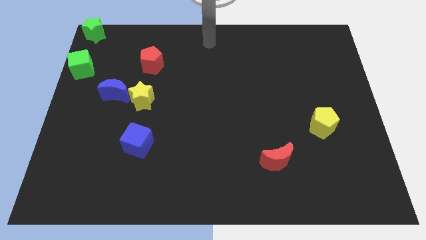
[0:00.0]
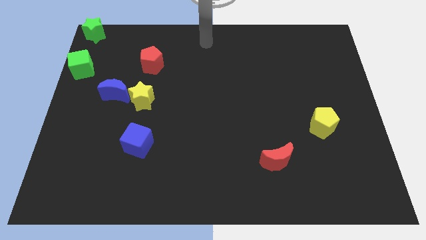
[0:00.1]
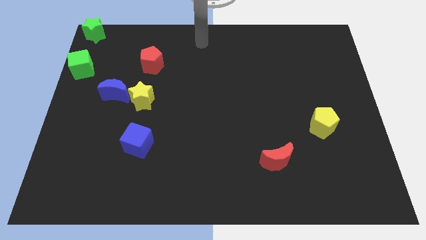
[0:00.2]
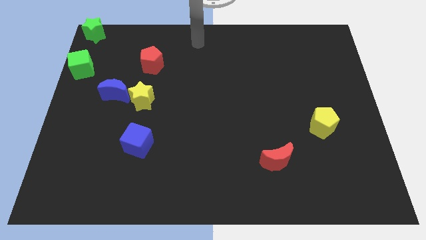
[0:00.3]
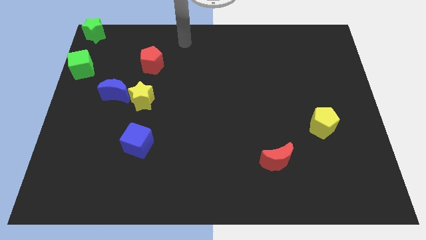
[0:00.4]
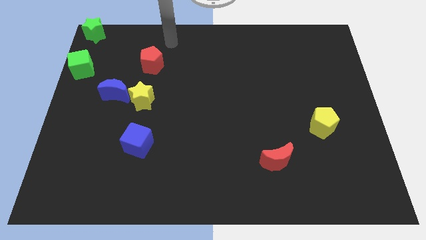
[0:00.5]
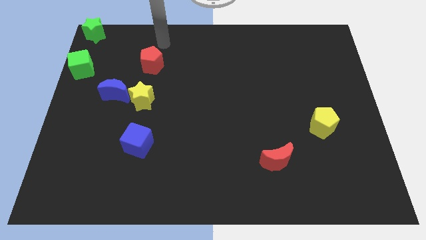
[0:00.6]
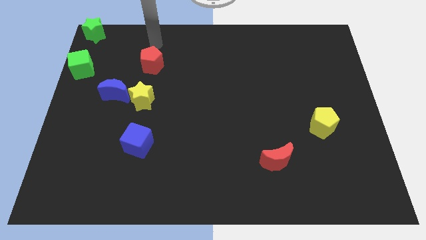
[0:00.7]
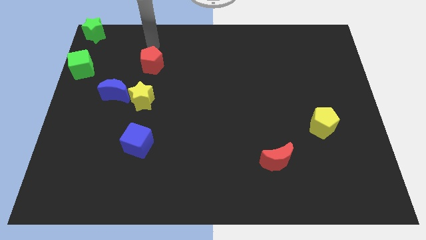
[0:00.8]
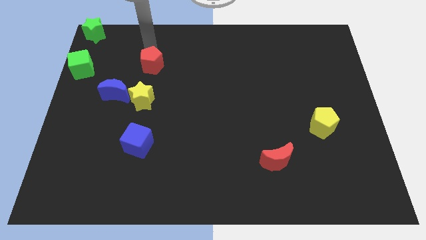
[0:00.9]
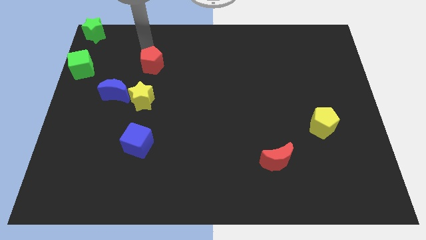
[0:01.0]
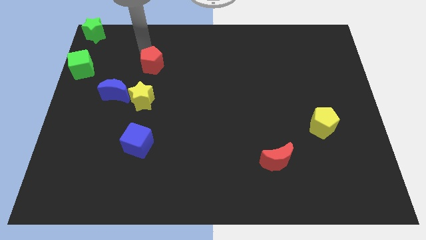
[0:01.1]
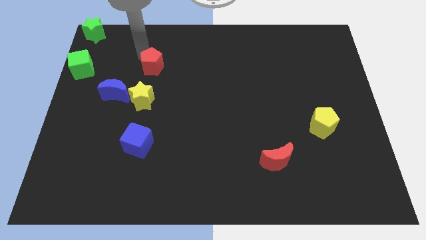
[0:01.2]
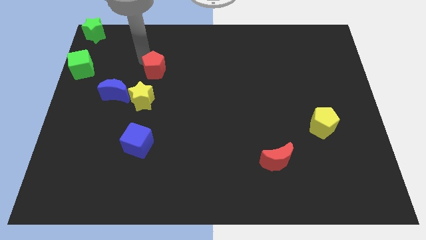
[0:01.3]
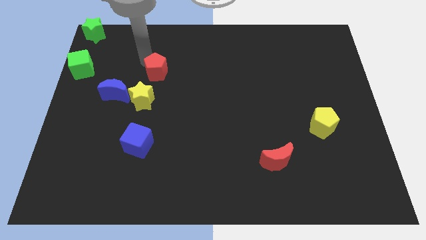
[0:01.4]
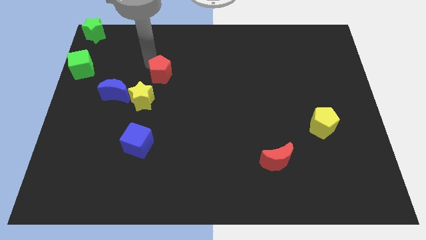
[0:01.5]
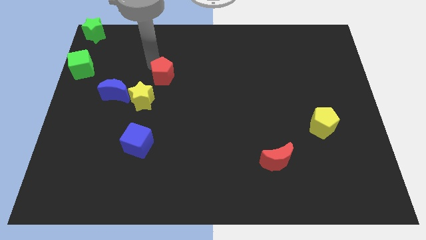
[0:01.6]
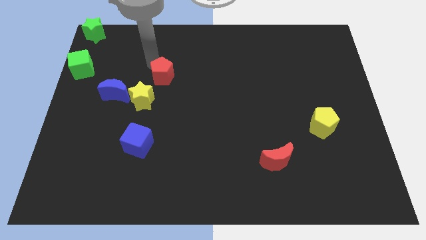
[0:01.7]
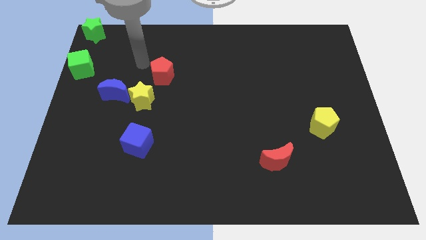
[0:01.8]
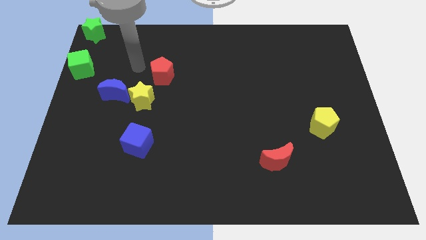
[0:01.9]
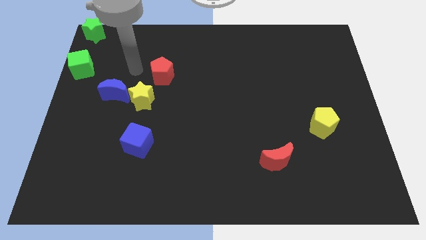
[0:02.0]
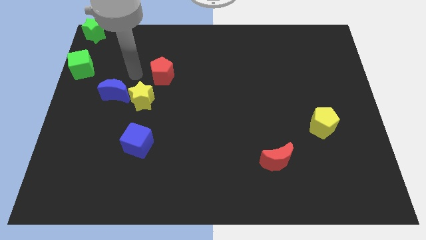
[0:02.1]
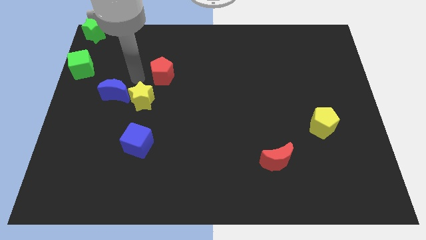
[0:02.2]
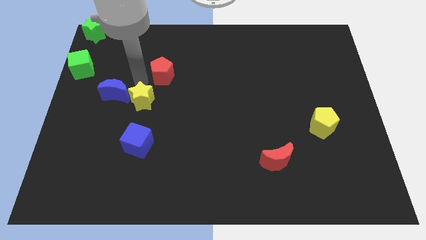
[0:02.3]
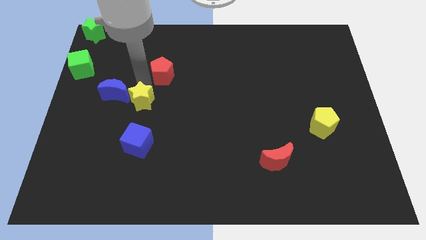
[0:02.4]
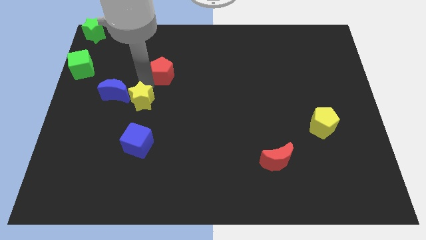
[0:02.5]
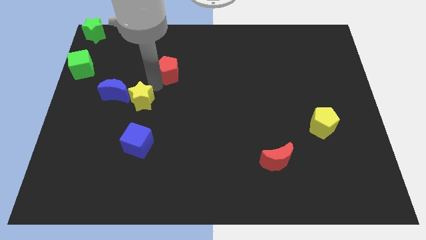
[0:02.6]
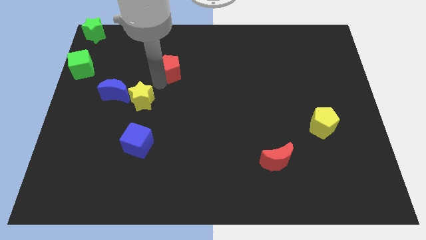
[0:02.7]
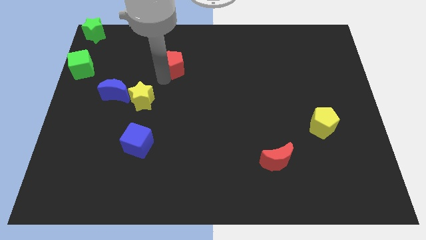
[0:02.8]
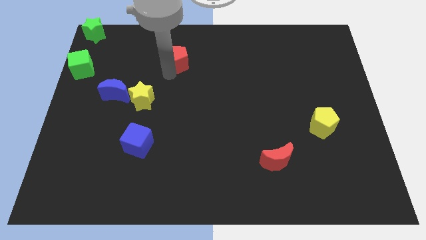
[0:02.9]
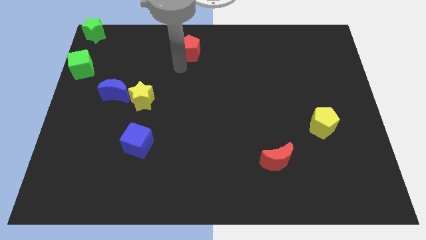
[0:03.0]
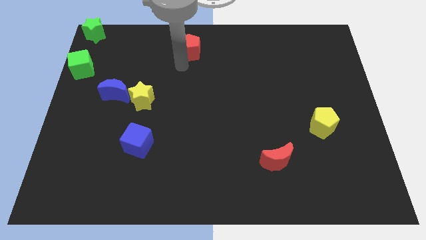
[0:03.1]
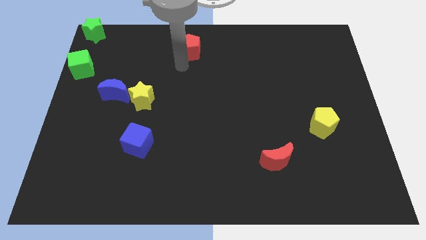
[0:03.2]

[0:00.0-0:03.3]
push the red pentagon towards the top center

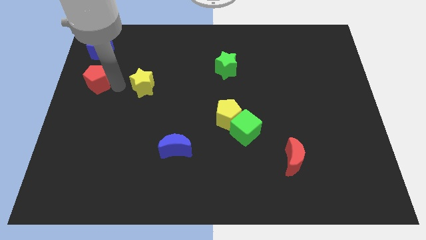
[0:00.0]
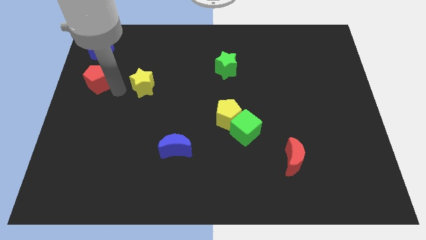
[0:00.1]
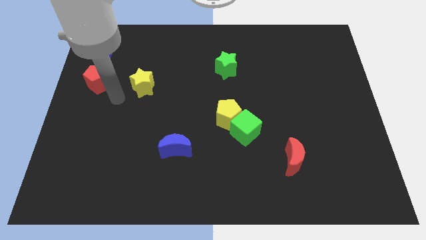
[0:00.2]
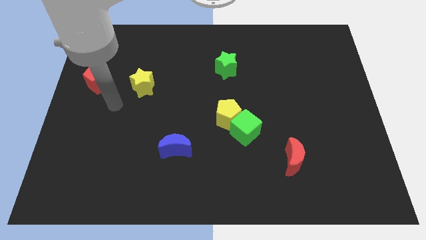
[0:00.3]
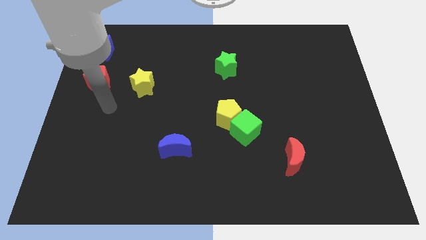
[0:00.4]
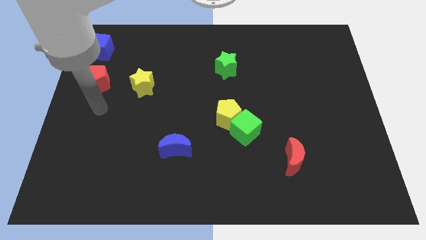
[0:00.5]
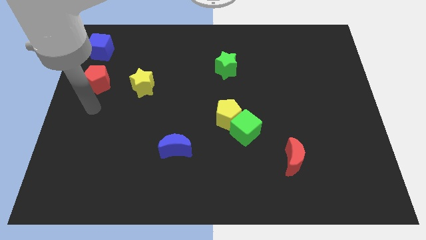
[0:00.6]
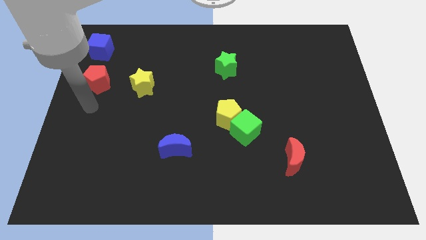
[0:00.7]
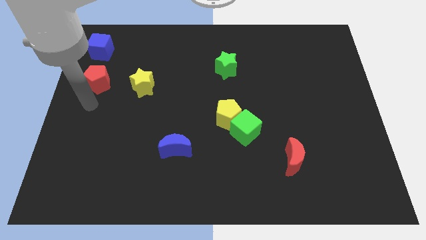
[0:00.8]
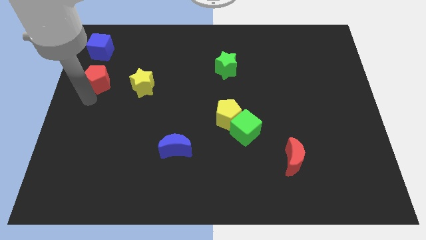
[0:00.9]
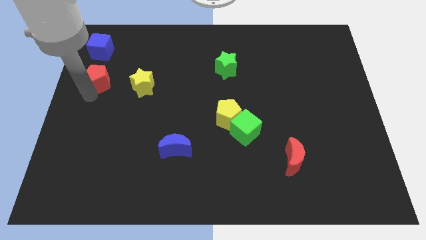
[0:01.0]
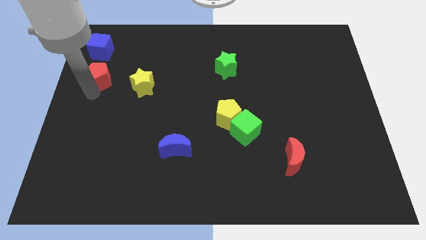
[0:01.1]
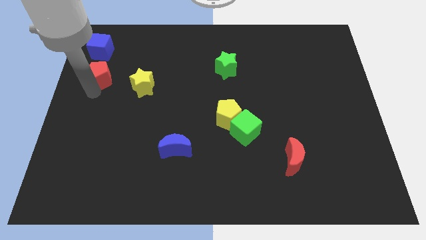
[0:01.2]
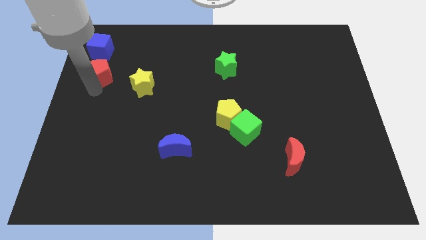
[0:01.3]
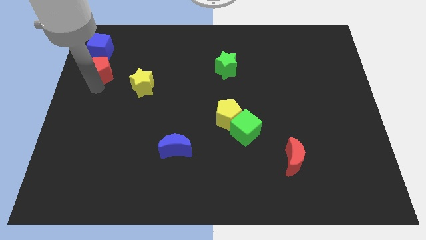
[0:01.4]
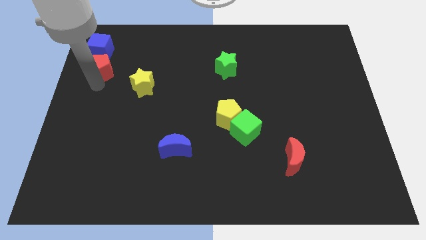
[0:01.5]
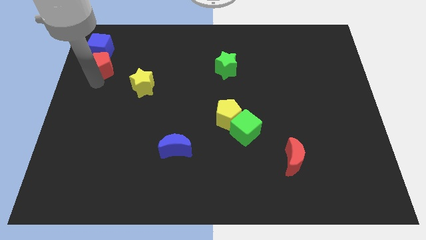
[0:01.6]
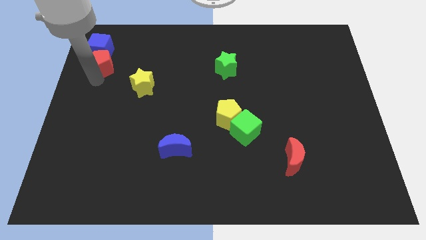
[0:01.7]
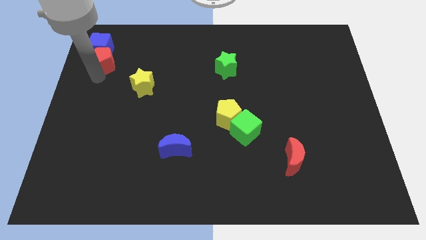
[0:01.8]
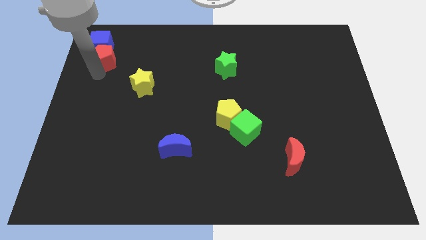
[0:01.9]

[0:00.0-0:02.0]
push the red pentagon into the bottom side of the blue cube

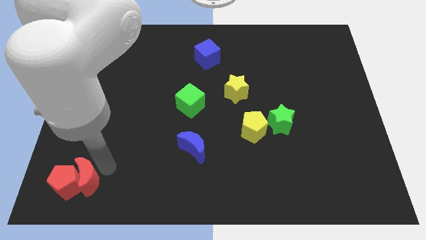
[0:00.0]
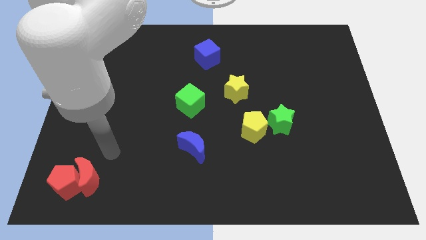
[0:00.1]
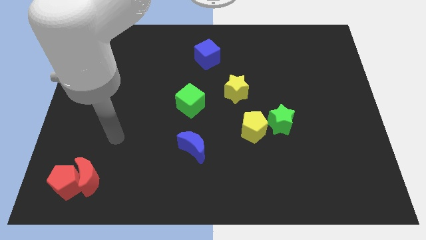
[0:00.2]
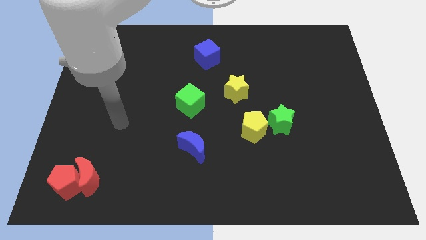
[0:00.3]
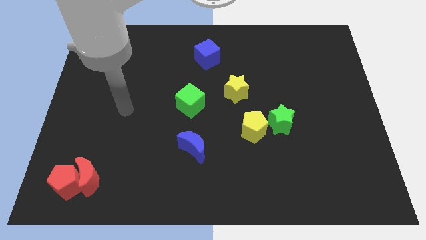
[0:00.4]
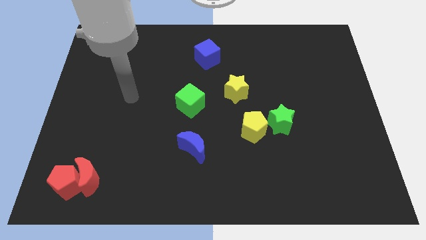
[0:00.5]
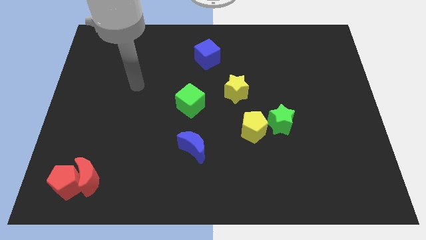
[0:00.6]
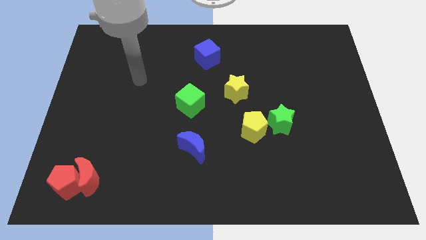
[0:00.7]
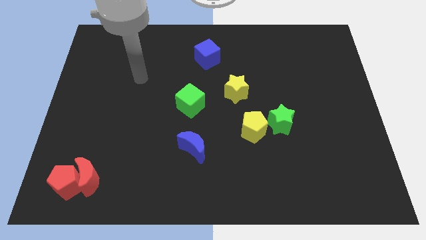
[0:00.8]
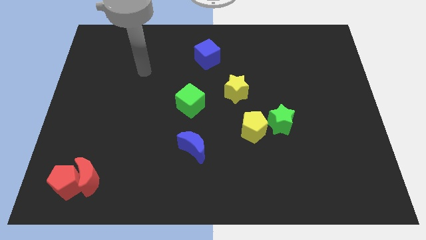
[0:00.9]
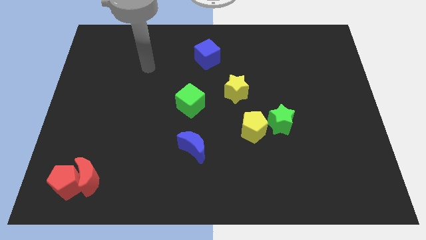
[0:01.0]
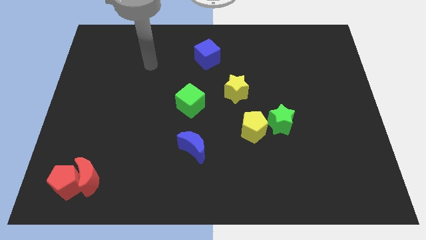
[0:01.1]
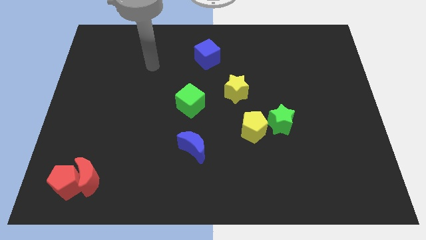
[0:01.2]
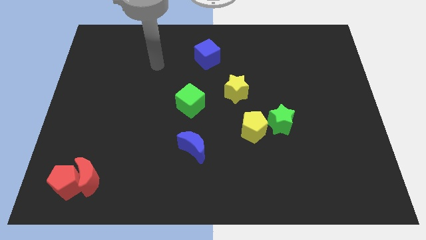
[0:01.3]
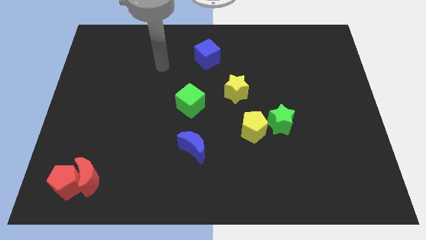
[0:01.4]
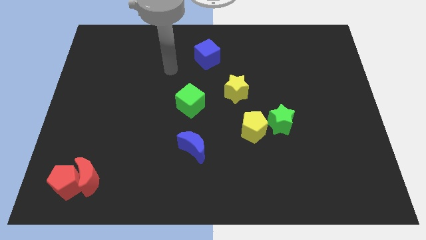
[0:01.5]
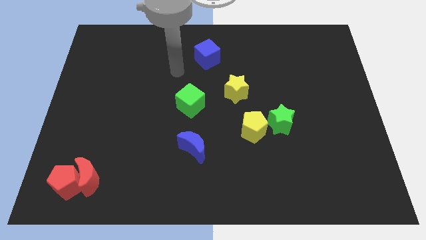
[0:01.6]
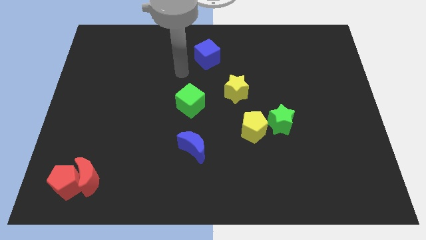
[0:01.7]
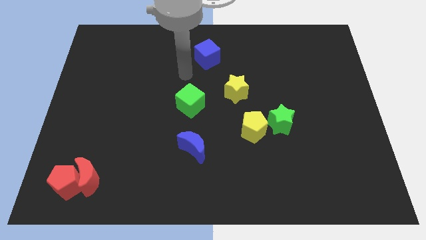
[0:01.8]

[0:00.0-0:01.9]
point your arm at the top of the green cube

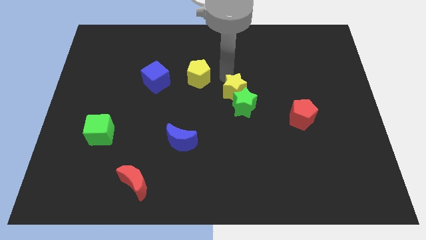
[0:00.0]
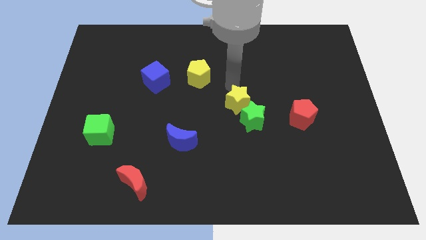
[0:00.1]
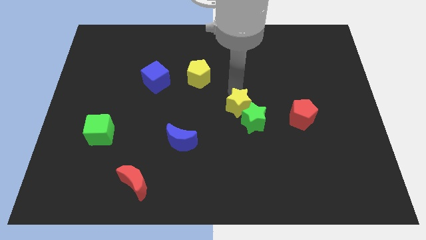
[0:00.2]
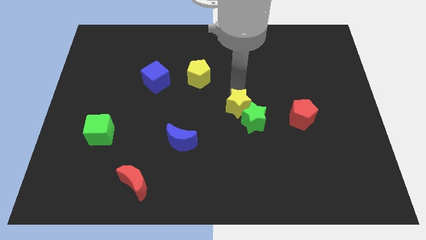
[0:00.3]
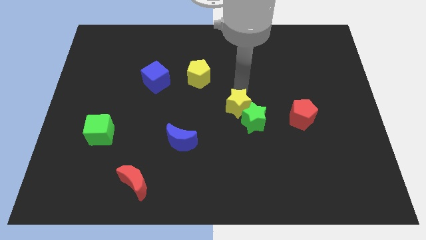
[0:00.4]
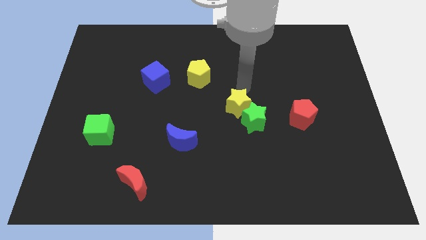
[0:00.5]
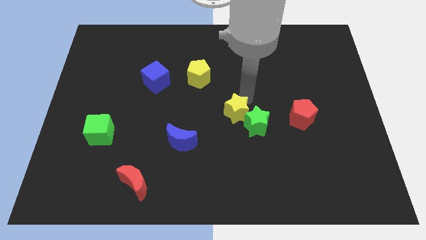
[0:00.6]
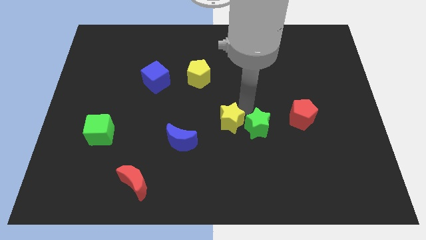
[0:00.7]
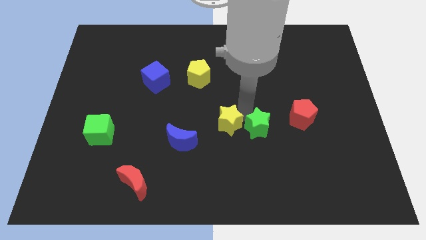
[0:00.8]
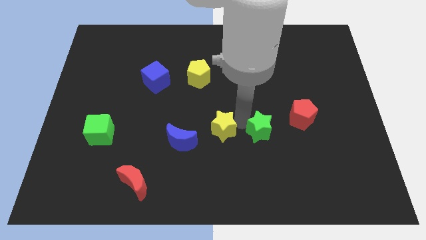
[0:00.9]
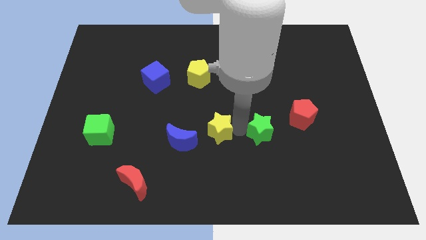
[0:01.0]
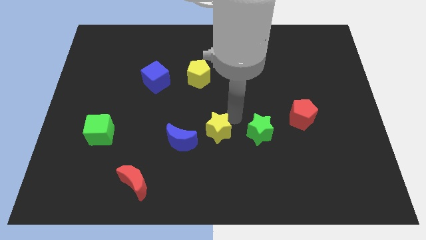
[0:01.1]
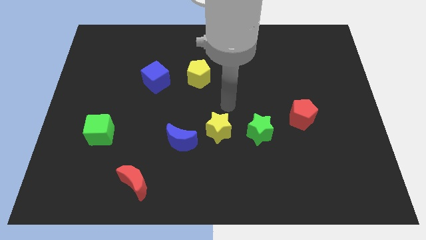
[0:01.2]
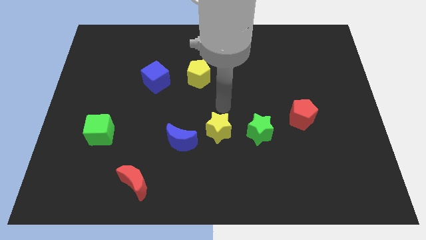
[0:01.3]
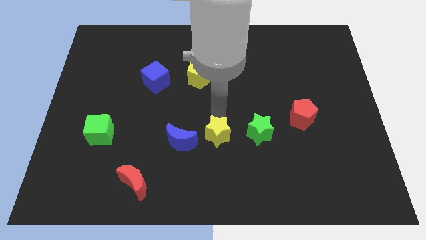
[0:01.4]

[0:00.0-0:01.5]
push the yellow star to the center of the board

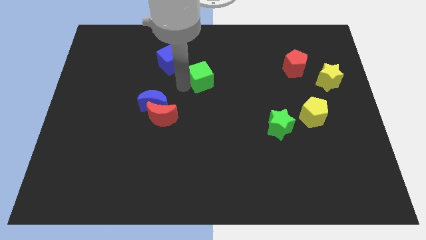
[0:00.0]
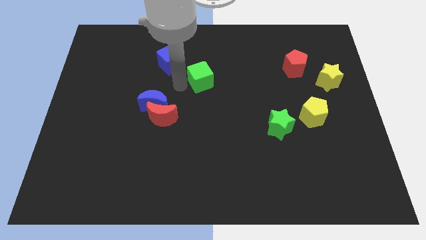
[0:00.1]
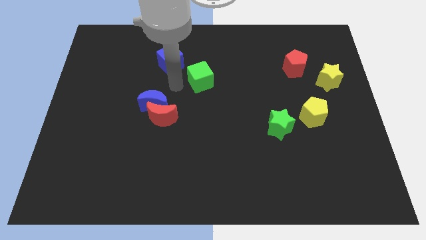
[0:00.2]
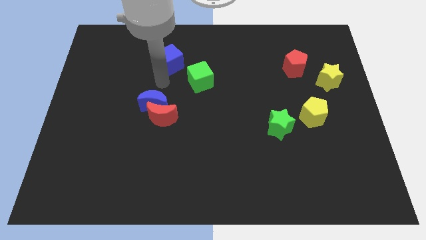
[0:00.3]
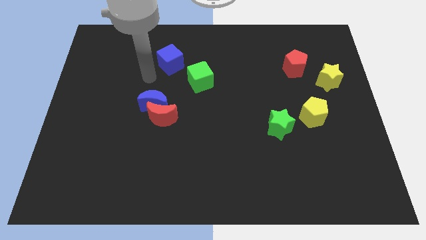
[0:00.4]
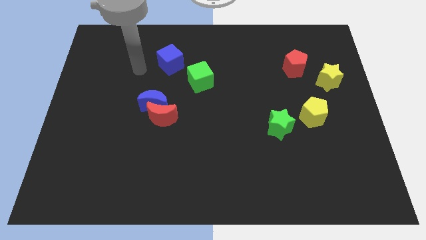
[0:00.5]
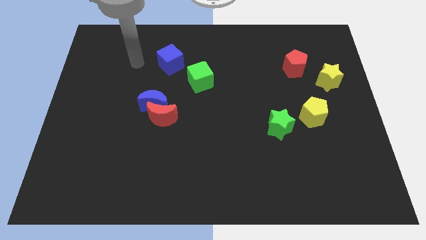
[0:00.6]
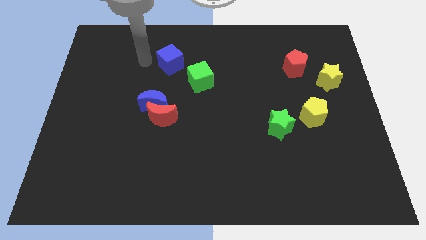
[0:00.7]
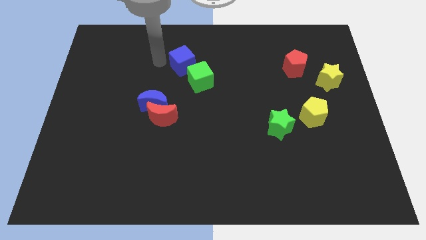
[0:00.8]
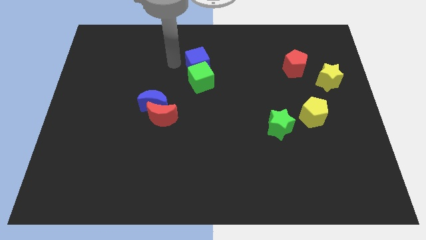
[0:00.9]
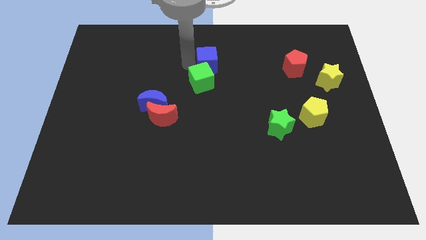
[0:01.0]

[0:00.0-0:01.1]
move the blue cube to the top of the green cube
